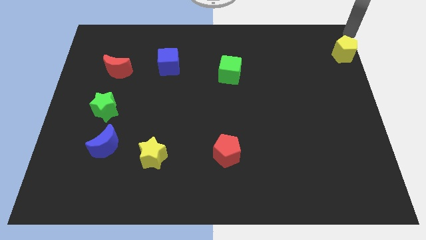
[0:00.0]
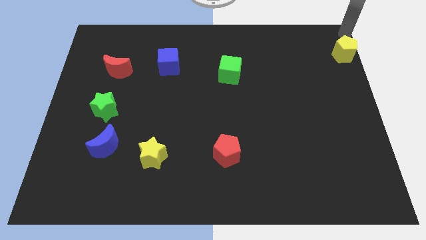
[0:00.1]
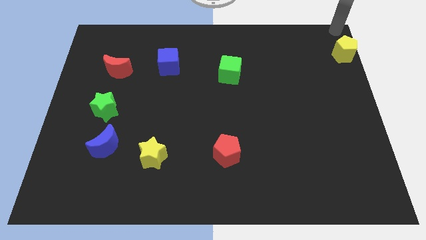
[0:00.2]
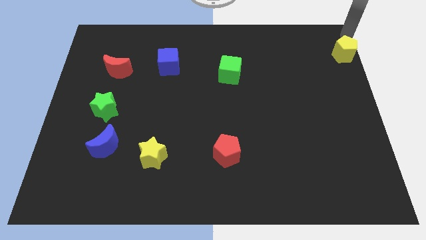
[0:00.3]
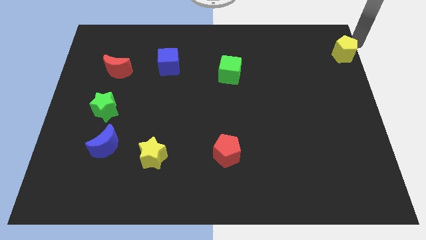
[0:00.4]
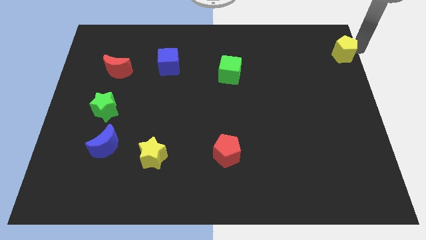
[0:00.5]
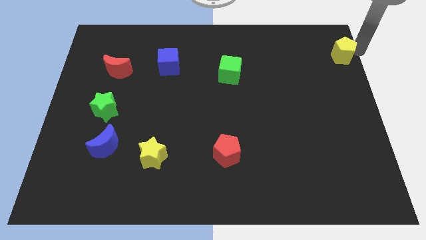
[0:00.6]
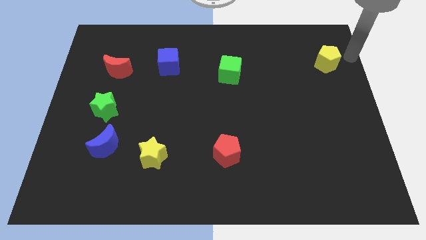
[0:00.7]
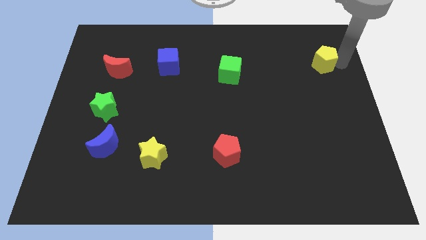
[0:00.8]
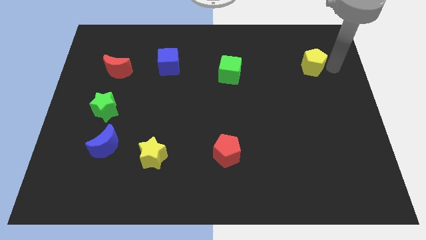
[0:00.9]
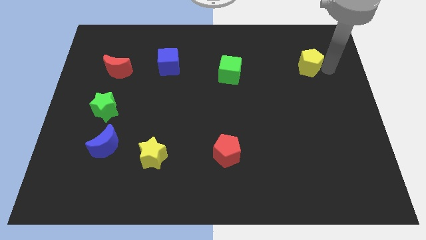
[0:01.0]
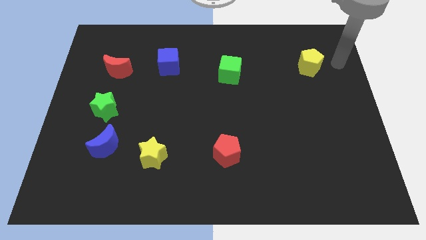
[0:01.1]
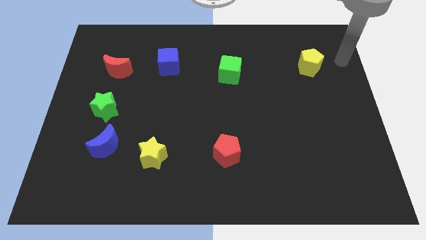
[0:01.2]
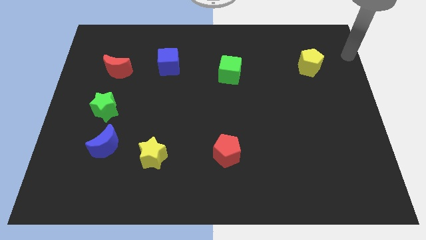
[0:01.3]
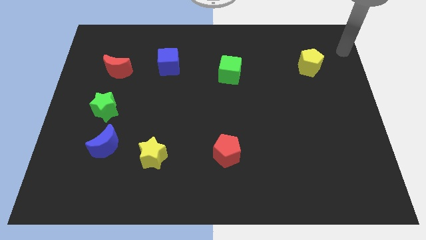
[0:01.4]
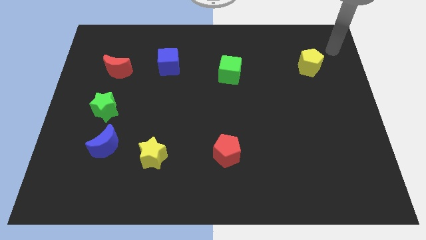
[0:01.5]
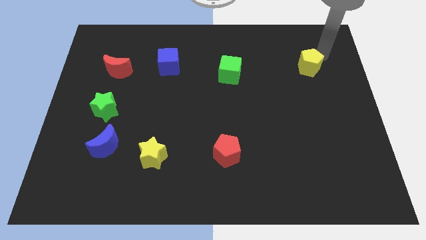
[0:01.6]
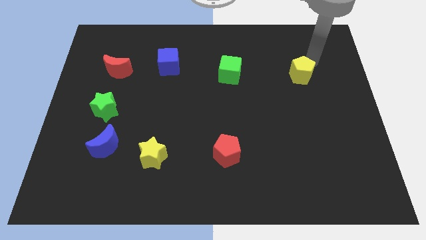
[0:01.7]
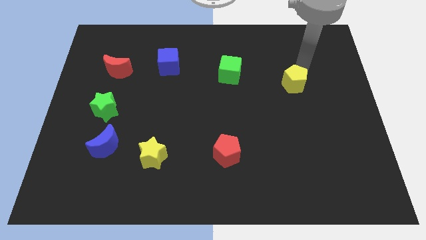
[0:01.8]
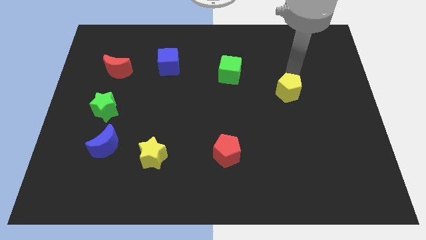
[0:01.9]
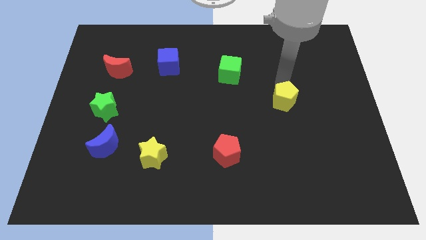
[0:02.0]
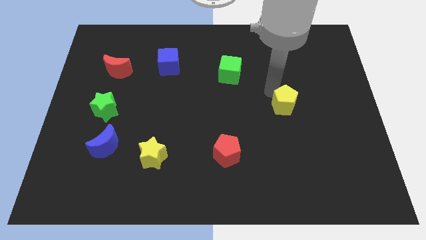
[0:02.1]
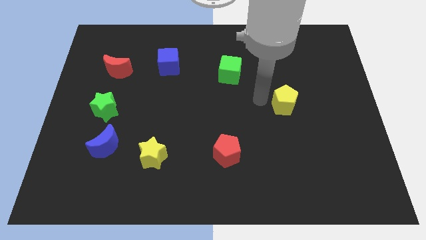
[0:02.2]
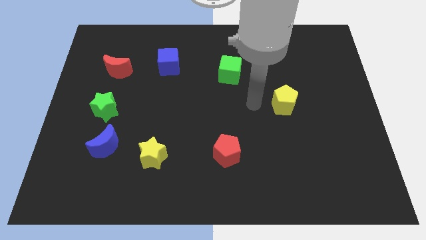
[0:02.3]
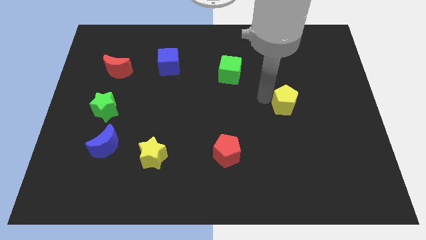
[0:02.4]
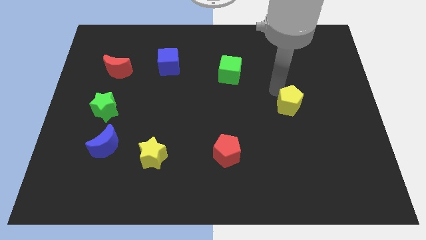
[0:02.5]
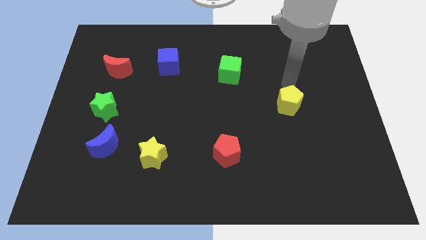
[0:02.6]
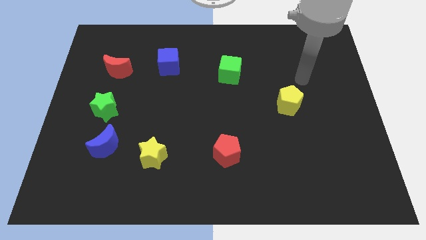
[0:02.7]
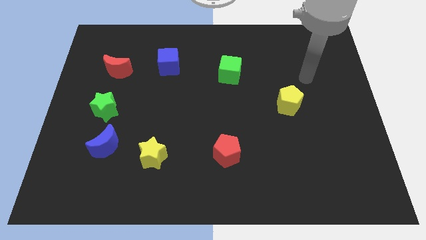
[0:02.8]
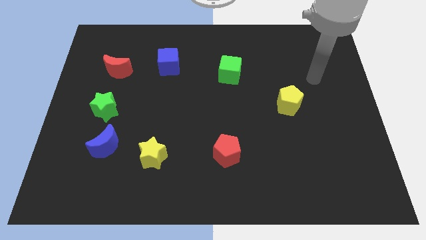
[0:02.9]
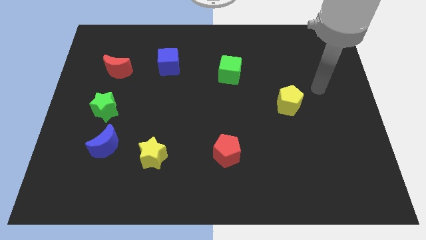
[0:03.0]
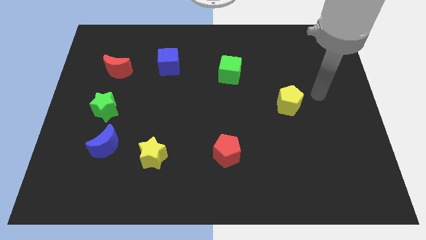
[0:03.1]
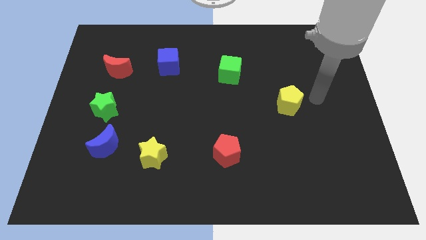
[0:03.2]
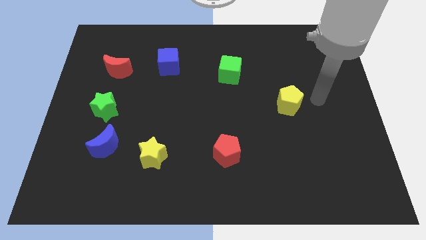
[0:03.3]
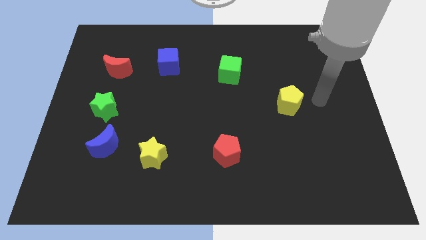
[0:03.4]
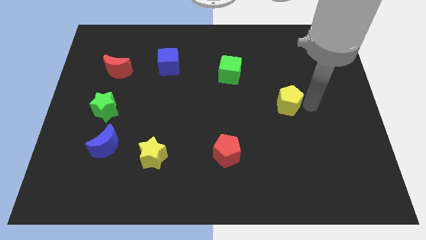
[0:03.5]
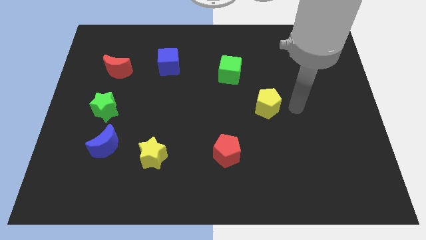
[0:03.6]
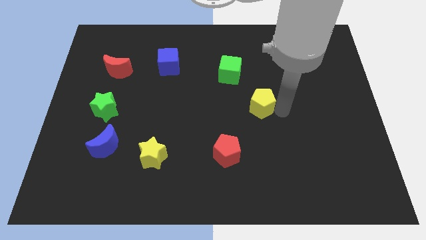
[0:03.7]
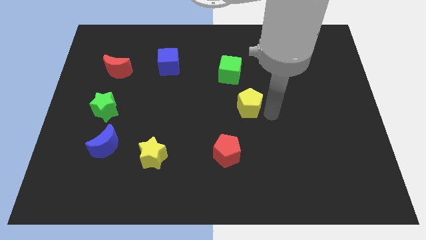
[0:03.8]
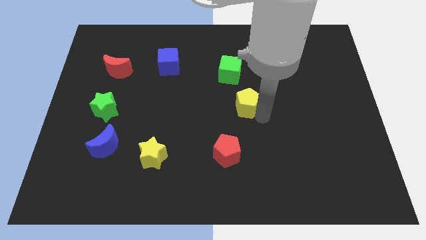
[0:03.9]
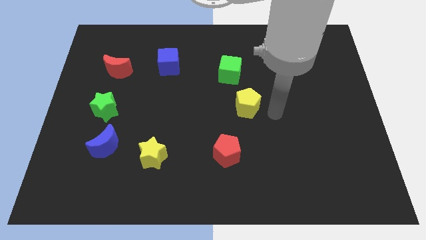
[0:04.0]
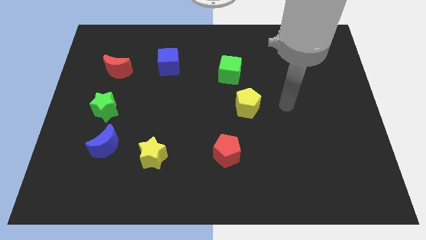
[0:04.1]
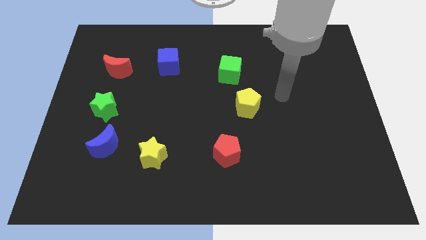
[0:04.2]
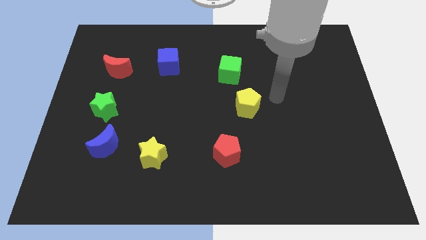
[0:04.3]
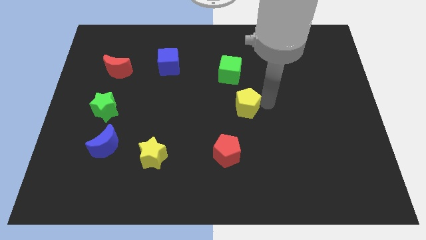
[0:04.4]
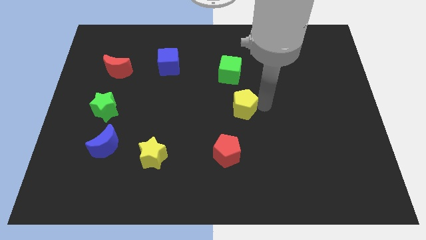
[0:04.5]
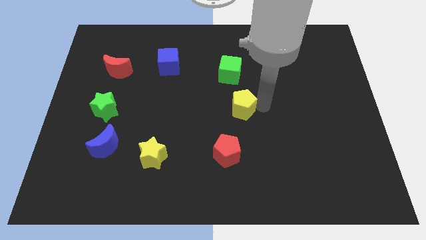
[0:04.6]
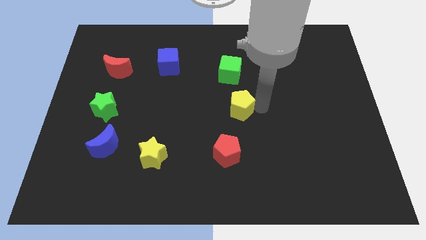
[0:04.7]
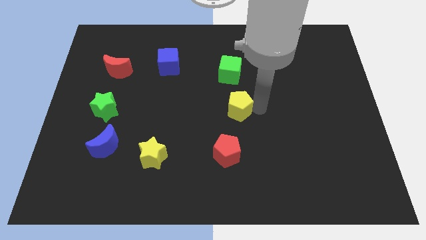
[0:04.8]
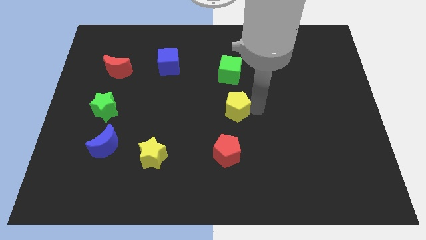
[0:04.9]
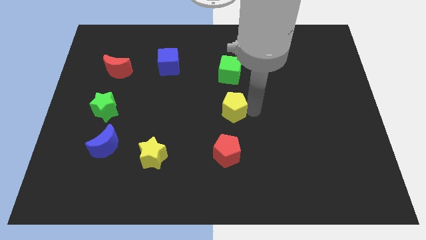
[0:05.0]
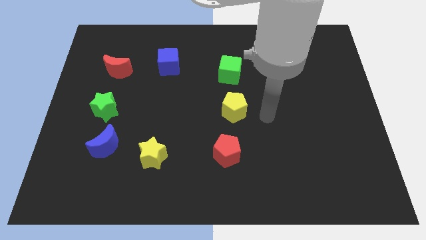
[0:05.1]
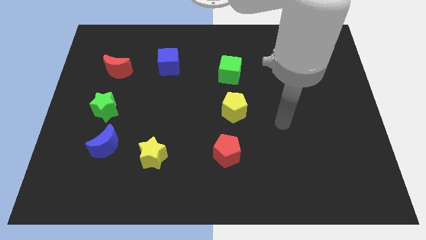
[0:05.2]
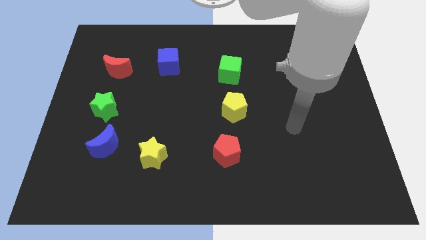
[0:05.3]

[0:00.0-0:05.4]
place the yellow pentagon to the bottom of the green block

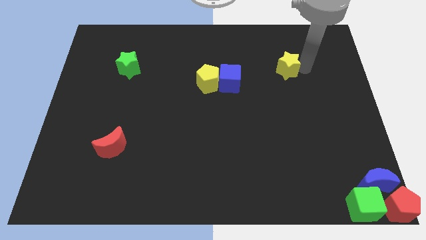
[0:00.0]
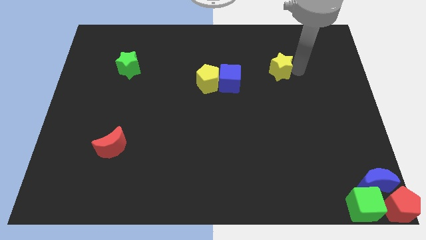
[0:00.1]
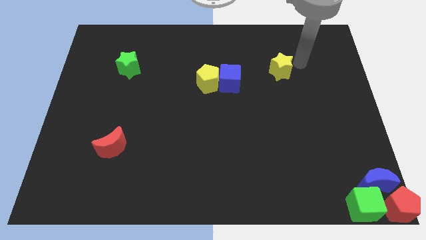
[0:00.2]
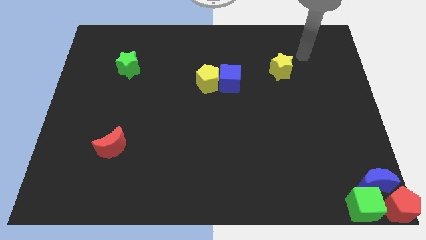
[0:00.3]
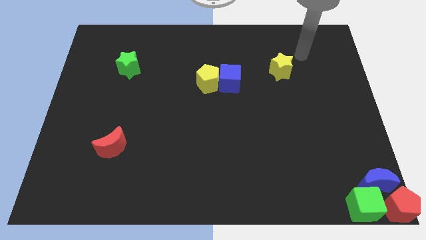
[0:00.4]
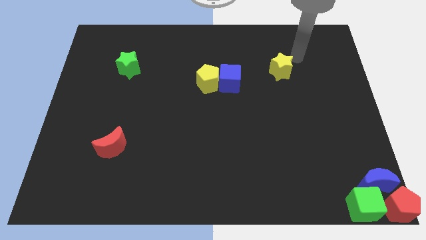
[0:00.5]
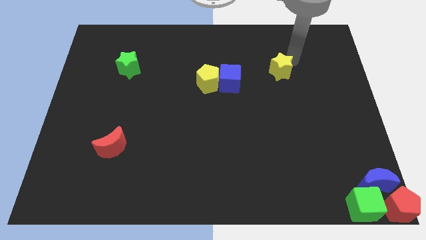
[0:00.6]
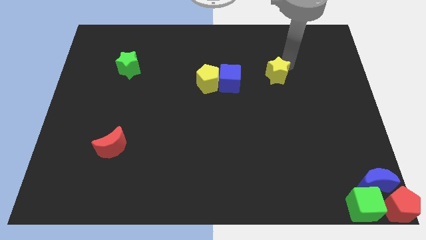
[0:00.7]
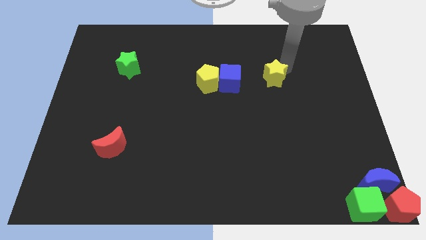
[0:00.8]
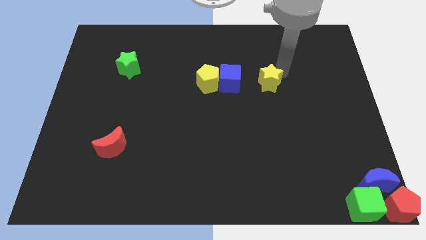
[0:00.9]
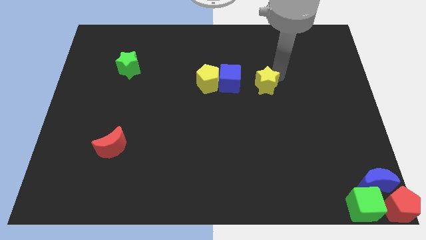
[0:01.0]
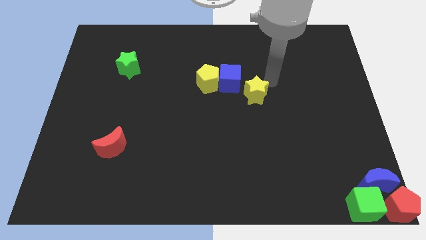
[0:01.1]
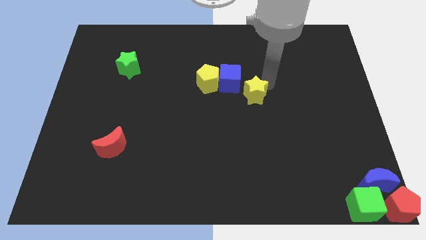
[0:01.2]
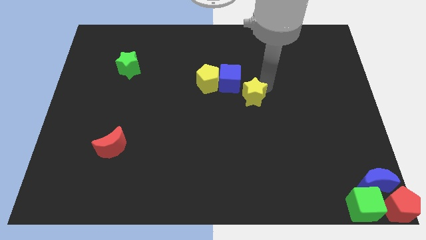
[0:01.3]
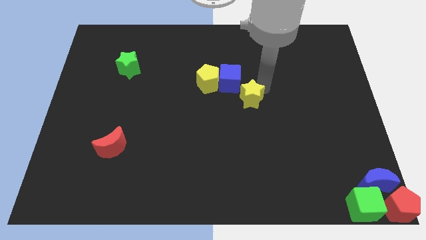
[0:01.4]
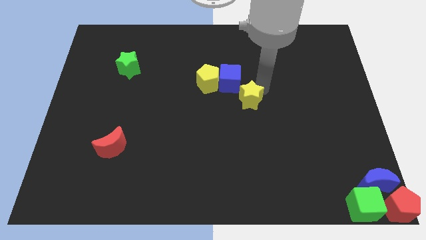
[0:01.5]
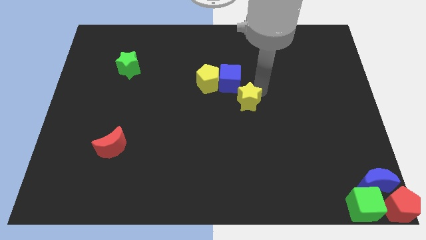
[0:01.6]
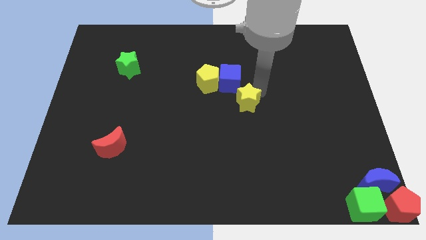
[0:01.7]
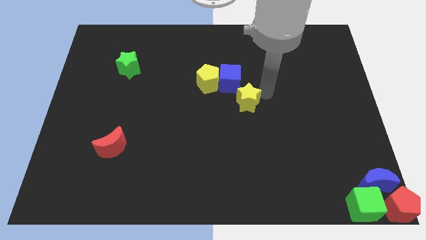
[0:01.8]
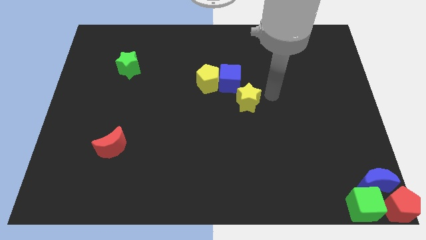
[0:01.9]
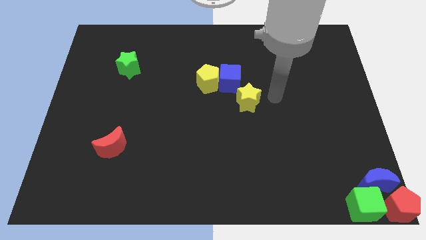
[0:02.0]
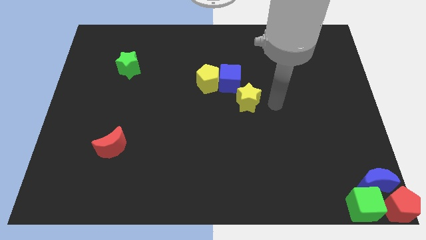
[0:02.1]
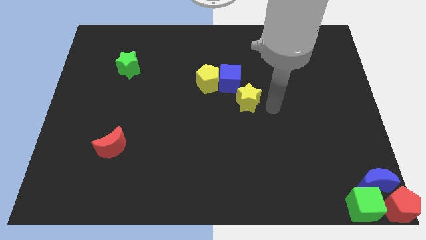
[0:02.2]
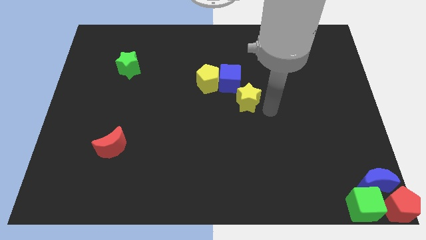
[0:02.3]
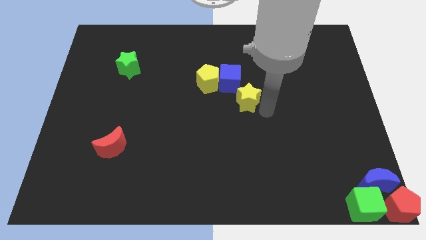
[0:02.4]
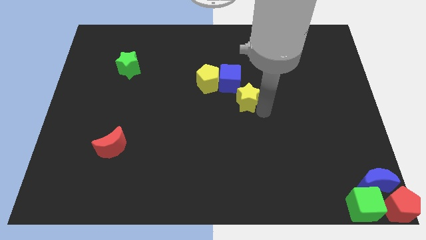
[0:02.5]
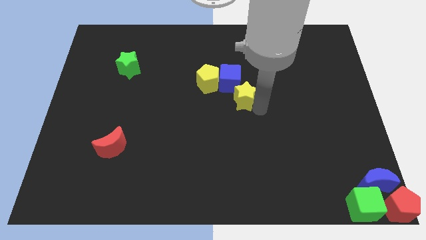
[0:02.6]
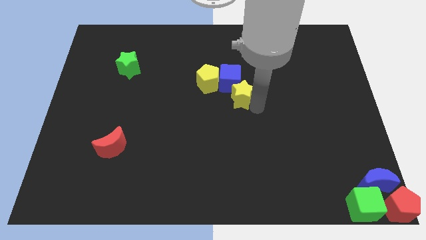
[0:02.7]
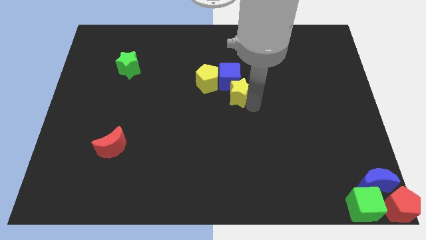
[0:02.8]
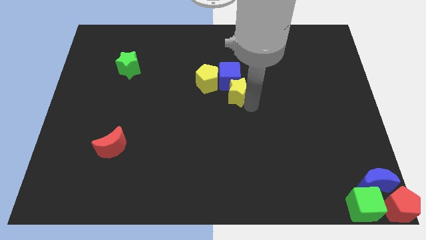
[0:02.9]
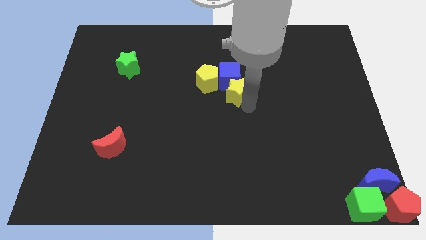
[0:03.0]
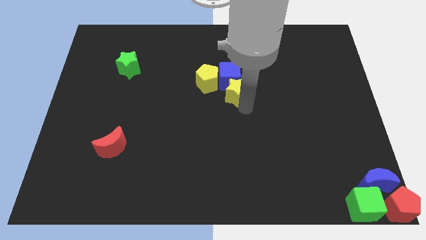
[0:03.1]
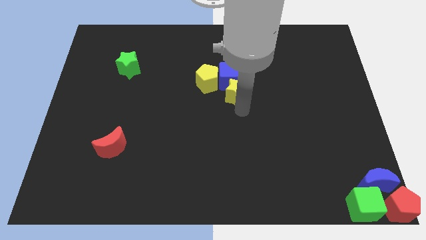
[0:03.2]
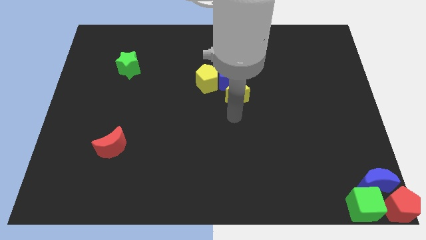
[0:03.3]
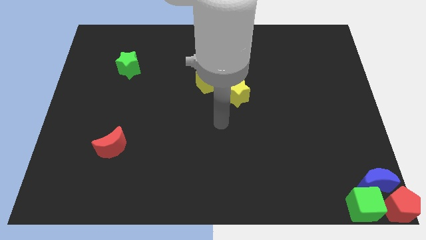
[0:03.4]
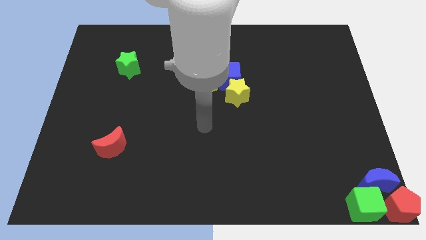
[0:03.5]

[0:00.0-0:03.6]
push yellow star at the bottom of blue cube
